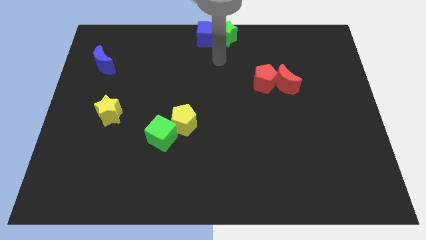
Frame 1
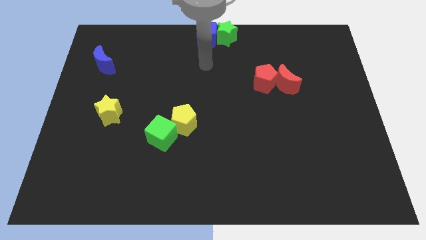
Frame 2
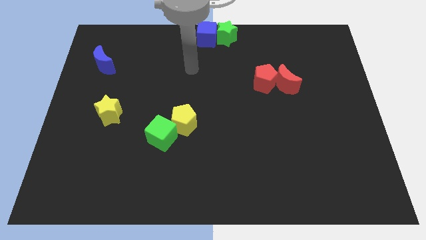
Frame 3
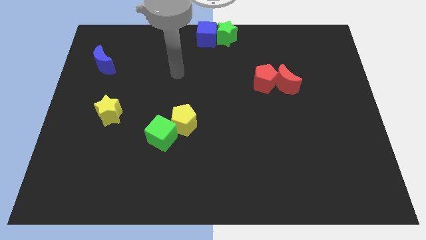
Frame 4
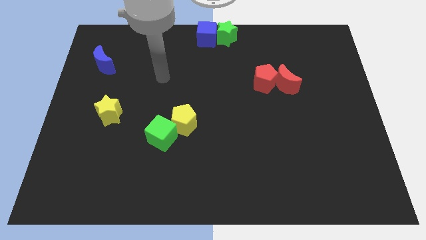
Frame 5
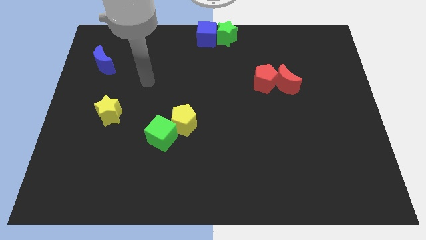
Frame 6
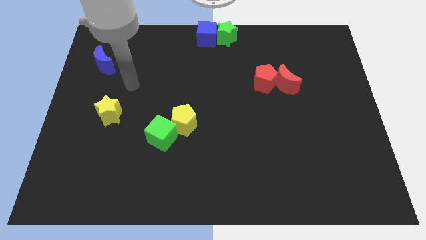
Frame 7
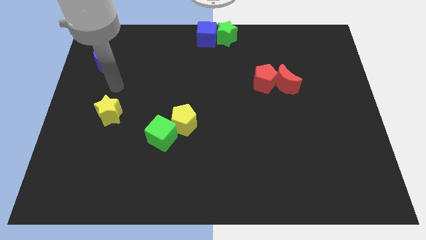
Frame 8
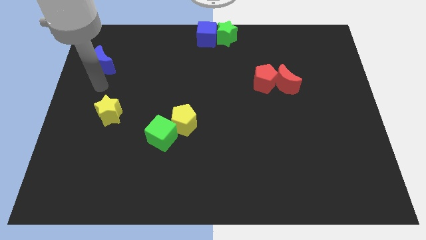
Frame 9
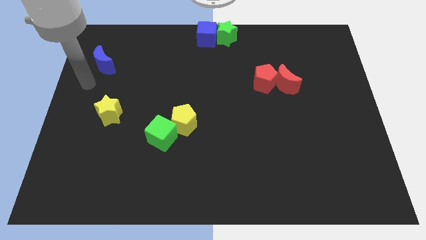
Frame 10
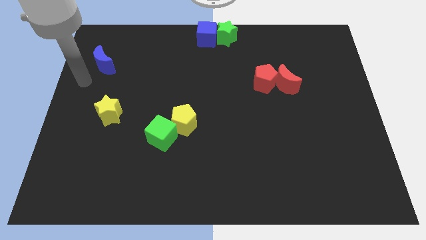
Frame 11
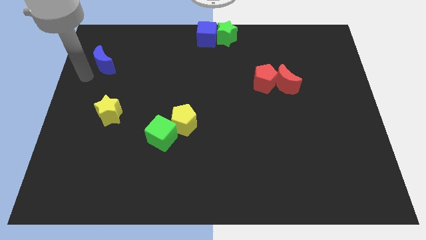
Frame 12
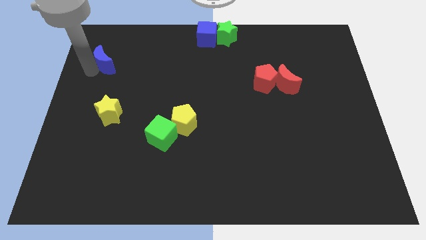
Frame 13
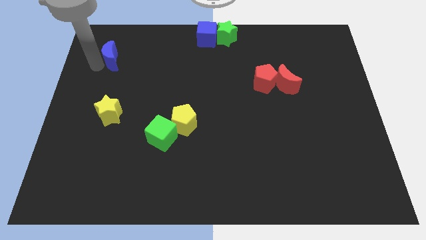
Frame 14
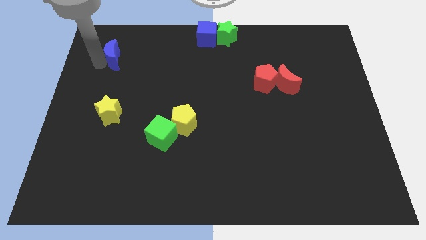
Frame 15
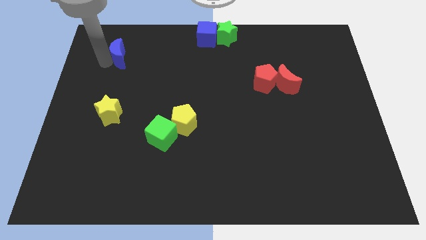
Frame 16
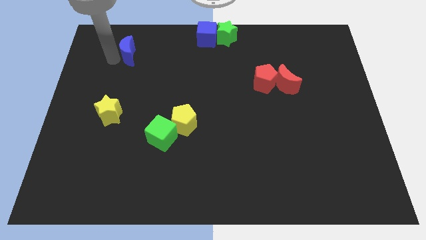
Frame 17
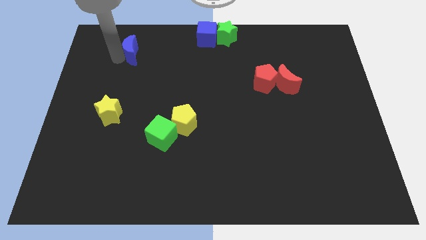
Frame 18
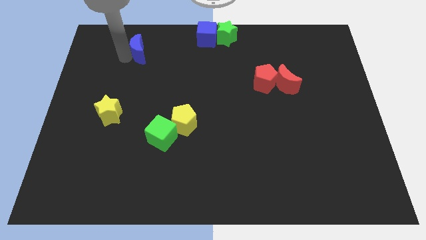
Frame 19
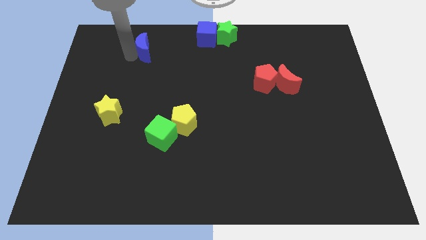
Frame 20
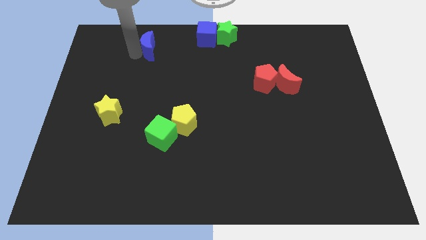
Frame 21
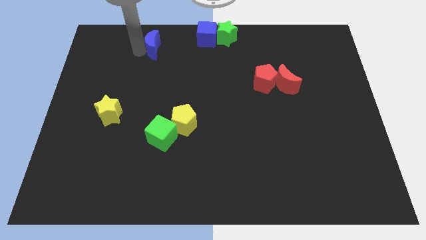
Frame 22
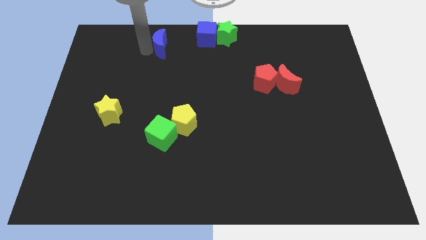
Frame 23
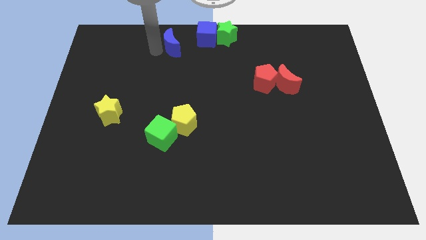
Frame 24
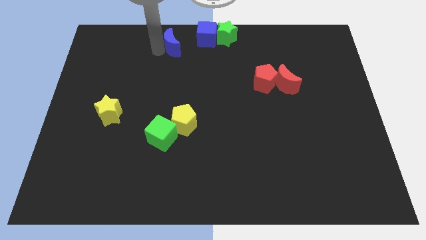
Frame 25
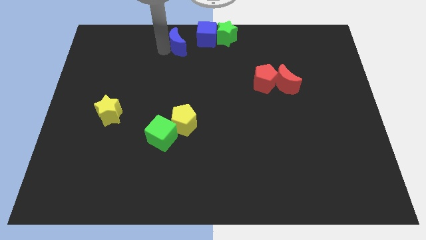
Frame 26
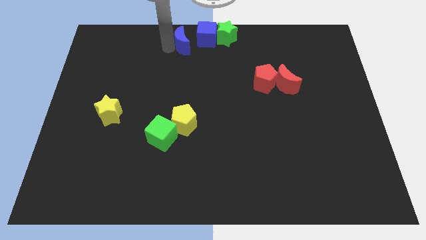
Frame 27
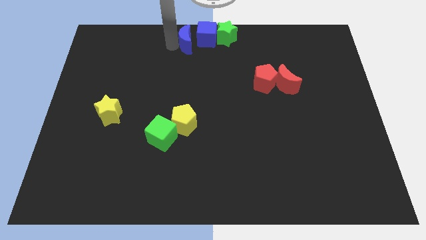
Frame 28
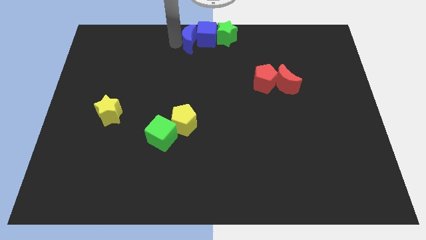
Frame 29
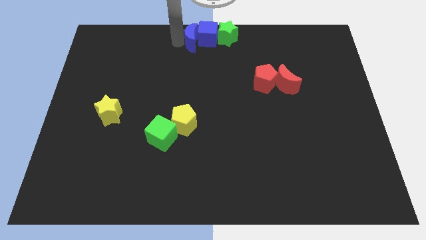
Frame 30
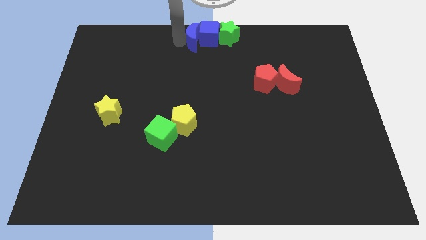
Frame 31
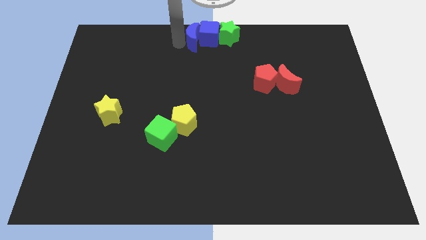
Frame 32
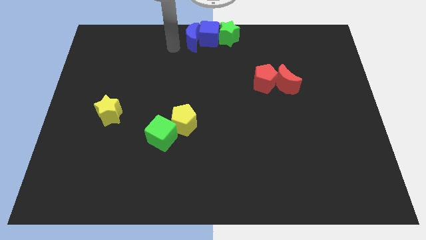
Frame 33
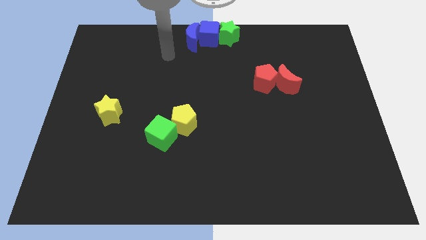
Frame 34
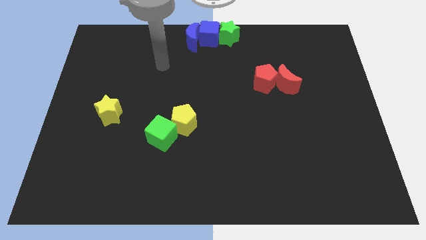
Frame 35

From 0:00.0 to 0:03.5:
move the blue crescent to the left of the blue cube

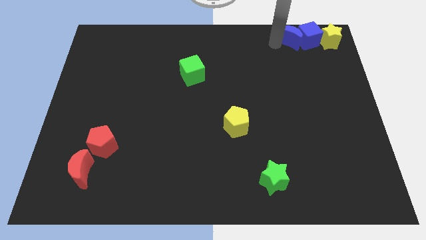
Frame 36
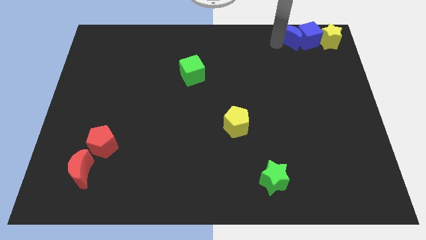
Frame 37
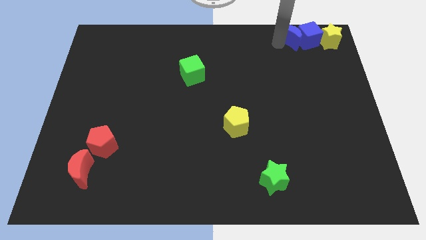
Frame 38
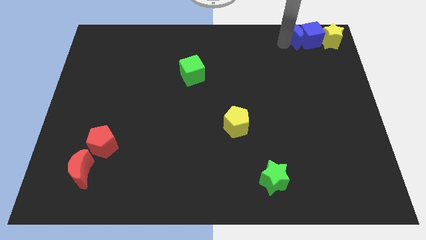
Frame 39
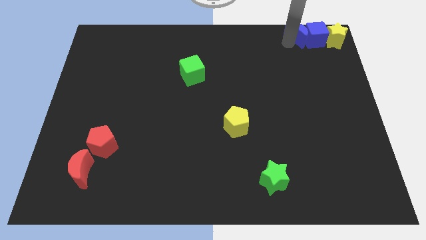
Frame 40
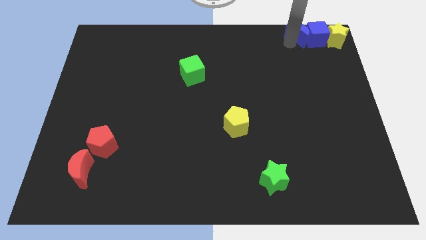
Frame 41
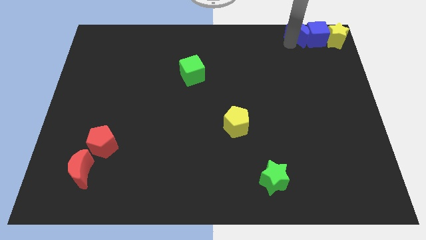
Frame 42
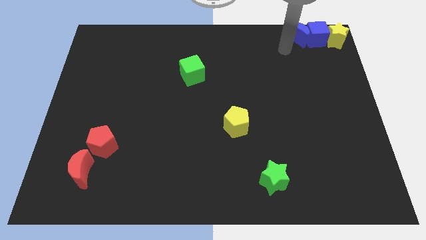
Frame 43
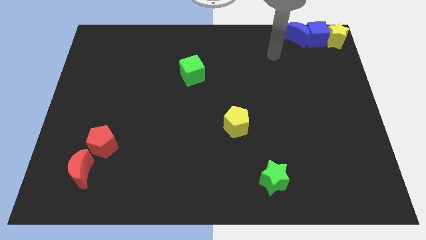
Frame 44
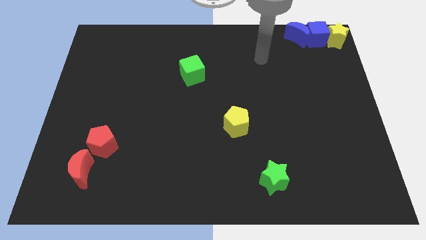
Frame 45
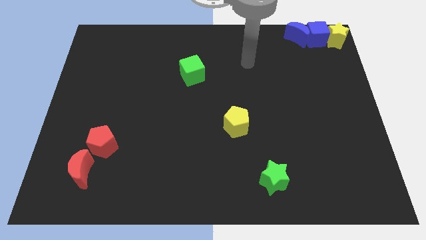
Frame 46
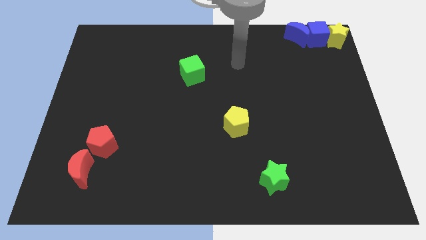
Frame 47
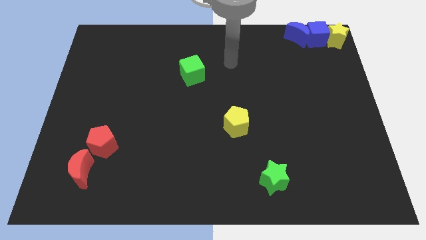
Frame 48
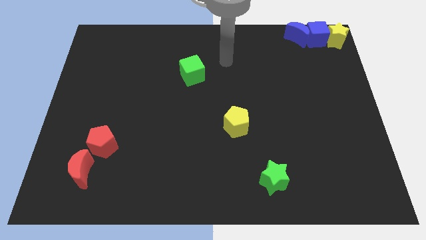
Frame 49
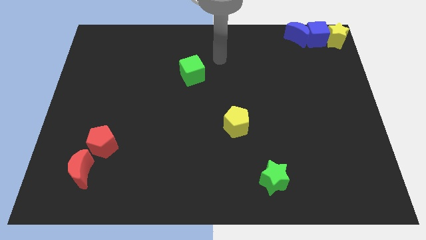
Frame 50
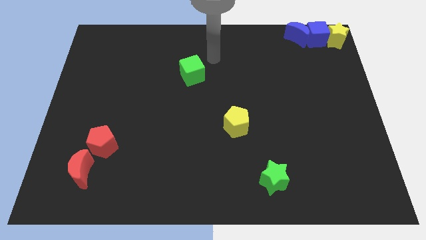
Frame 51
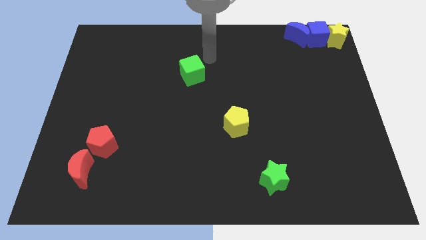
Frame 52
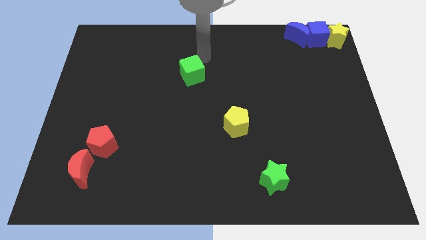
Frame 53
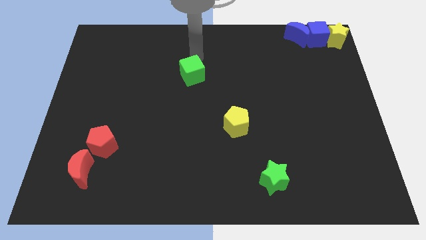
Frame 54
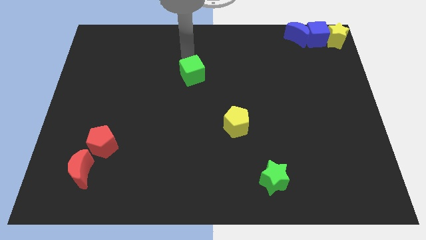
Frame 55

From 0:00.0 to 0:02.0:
place your arm above the green cube

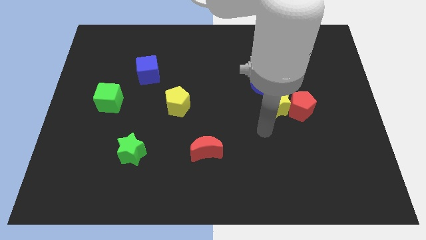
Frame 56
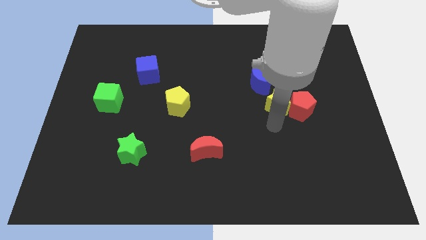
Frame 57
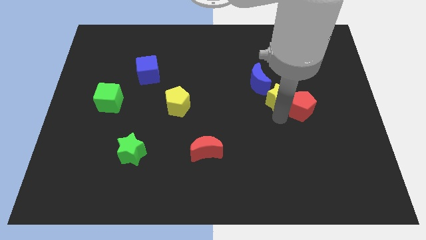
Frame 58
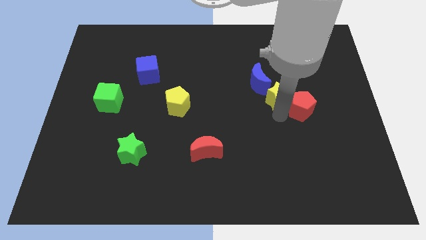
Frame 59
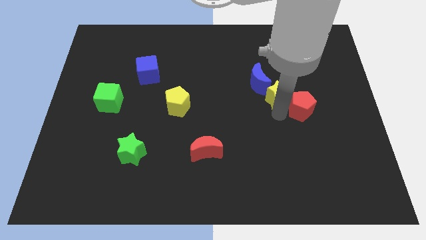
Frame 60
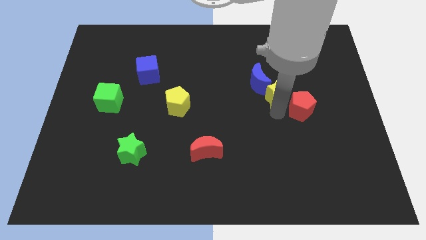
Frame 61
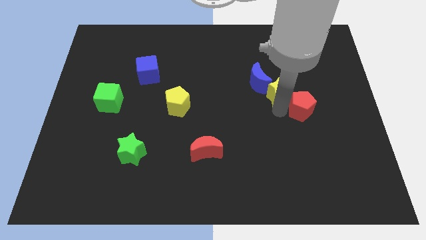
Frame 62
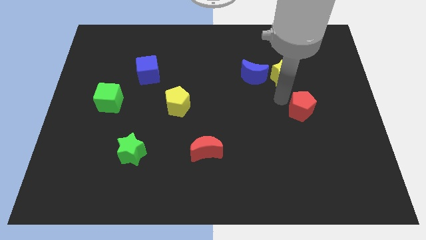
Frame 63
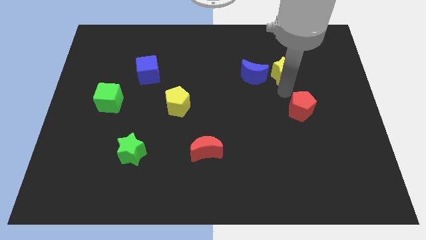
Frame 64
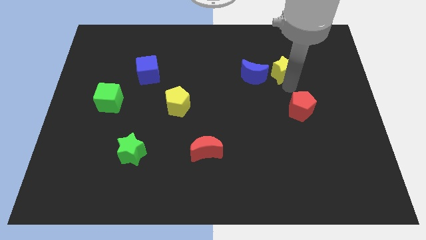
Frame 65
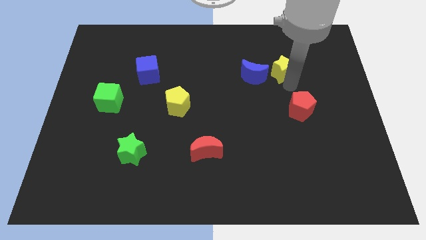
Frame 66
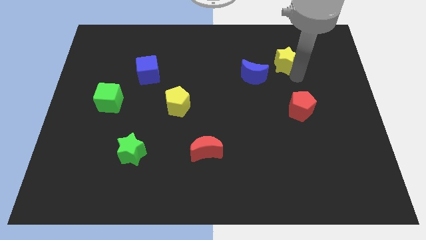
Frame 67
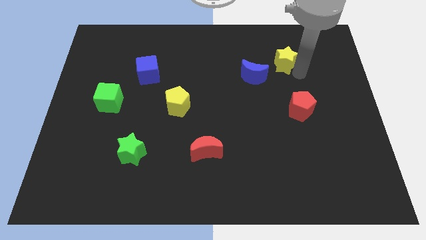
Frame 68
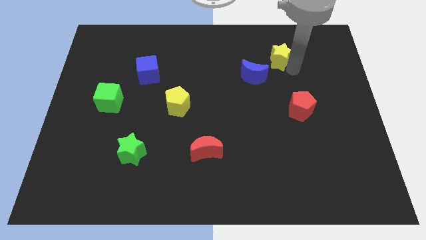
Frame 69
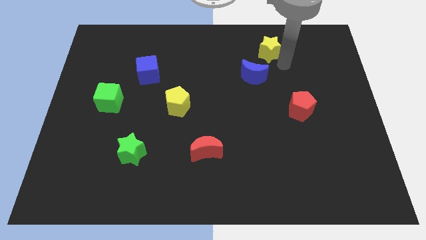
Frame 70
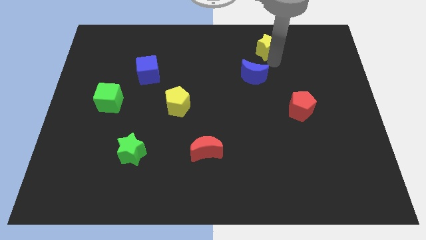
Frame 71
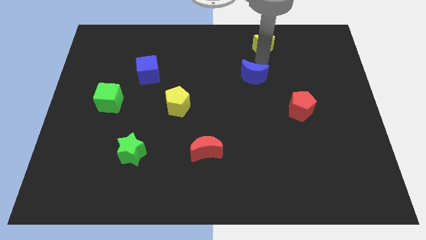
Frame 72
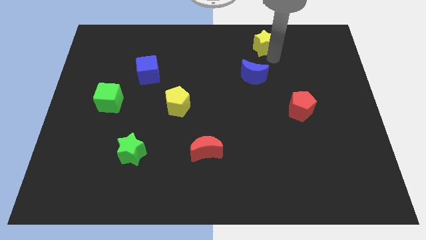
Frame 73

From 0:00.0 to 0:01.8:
separate yellow star from red pentagon

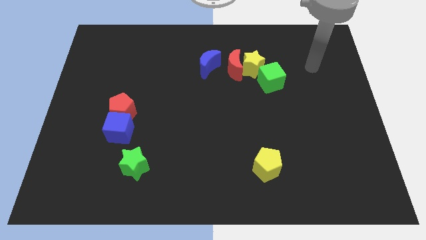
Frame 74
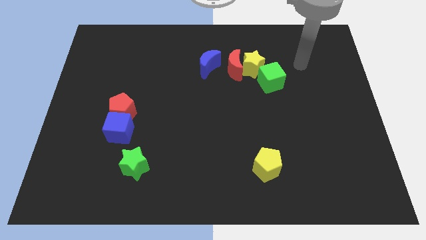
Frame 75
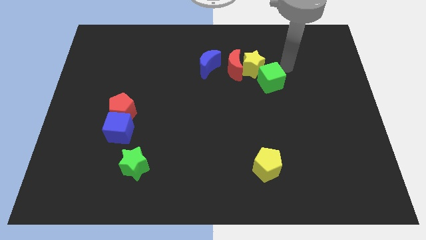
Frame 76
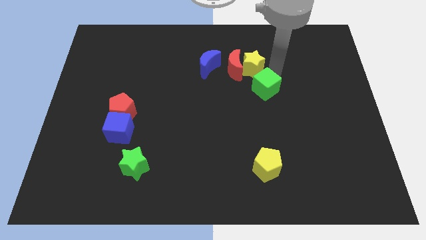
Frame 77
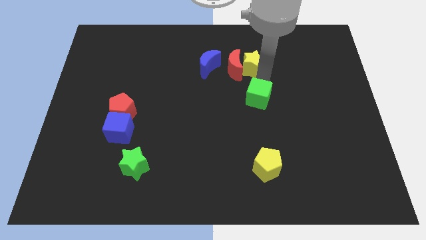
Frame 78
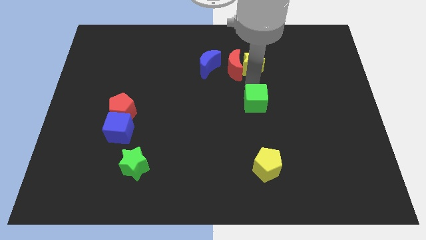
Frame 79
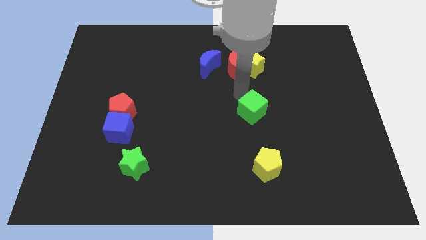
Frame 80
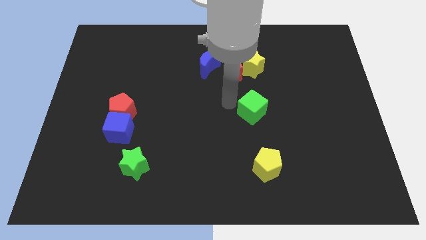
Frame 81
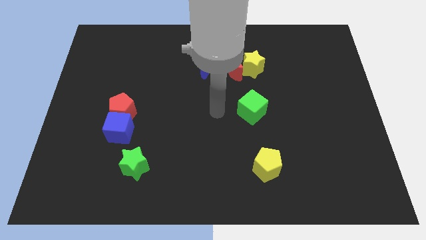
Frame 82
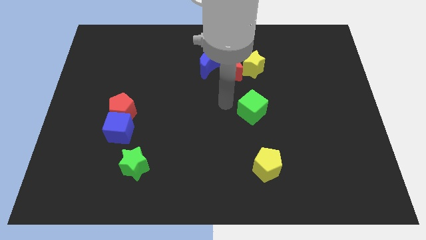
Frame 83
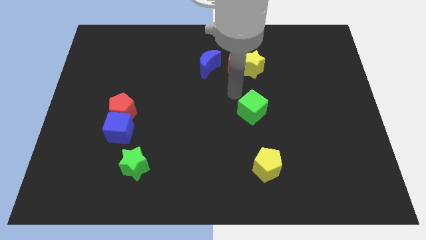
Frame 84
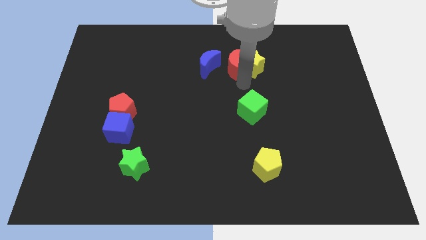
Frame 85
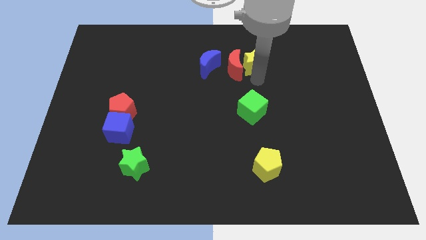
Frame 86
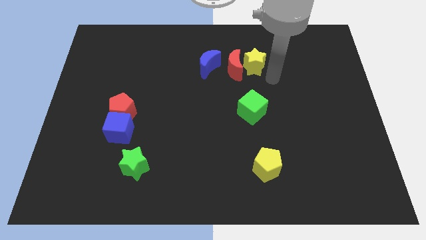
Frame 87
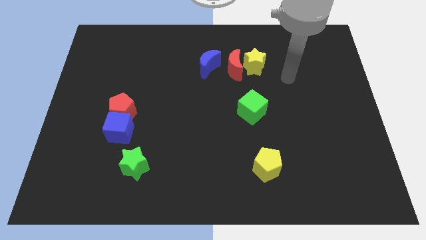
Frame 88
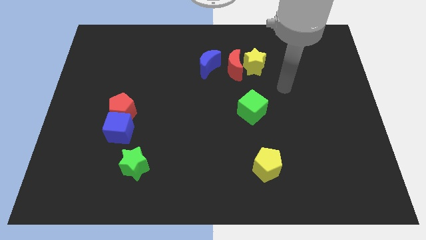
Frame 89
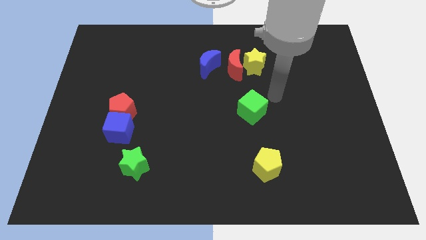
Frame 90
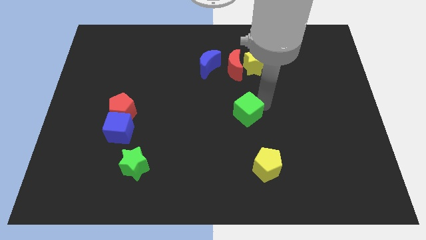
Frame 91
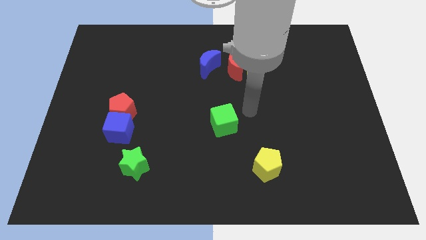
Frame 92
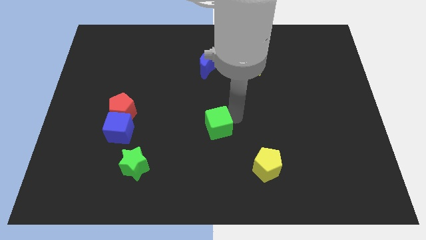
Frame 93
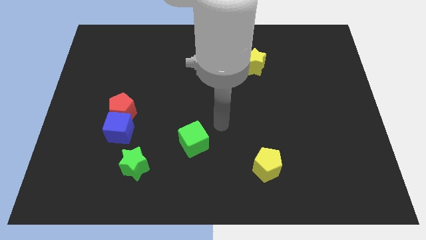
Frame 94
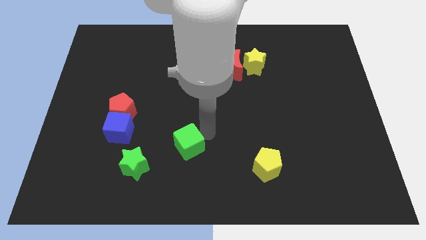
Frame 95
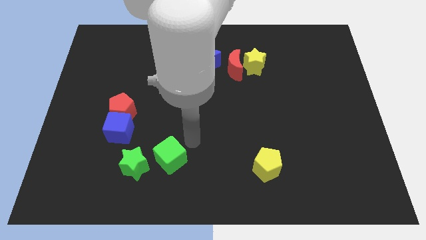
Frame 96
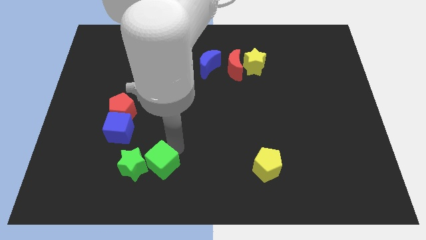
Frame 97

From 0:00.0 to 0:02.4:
push the green cube to the right of the green star
